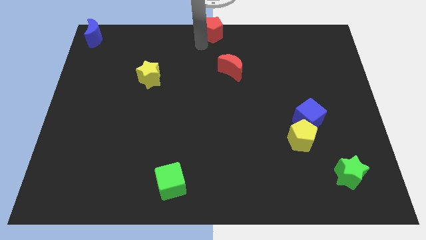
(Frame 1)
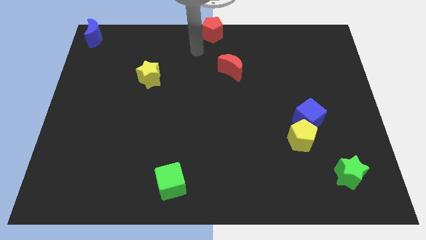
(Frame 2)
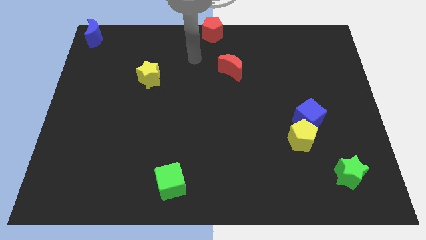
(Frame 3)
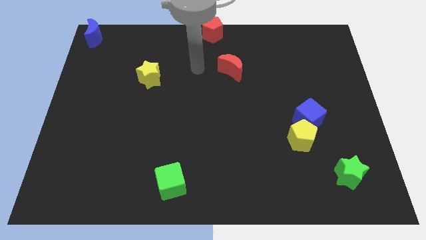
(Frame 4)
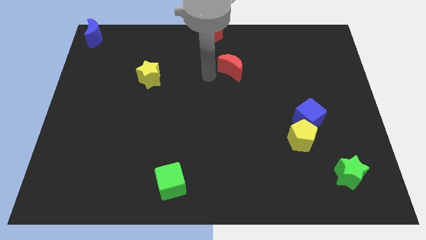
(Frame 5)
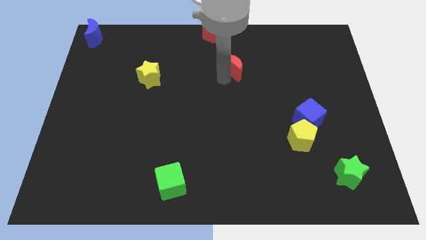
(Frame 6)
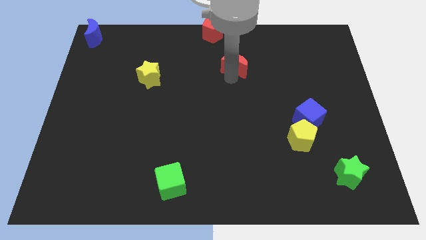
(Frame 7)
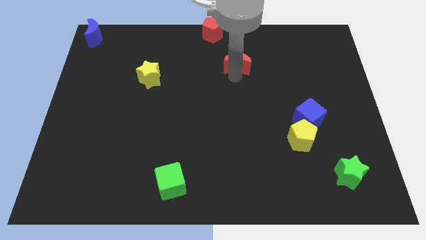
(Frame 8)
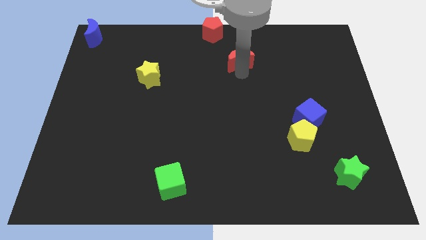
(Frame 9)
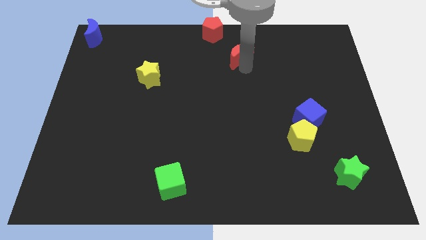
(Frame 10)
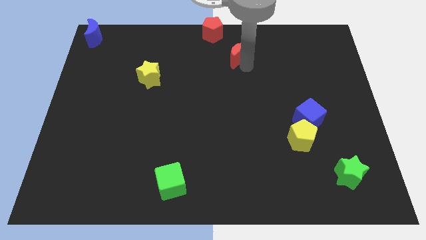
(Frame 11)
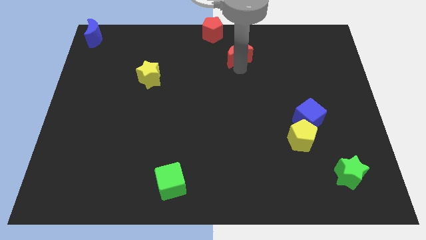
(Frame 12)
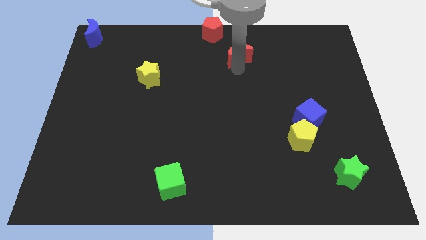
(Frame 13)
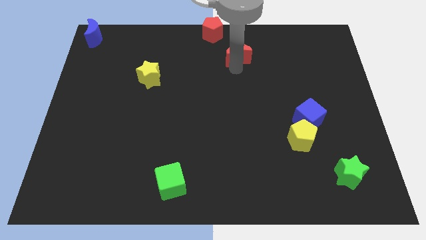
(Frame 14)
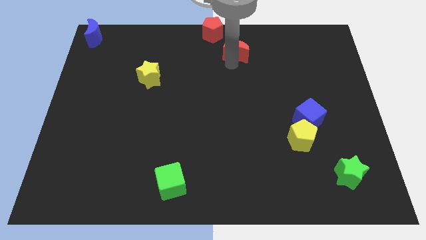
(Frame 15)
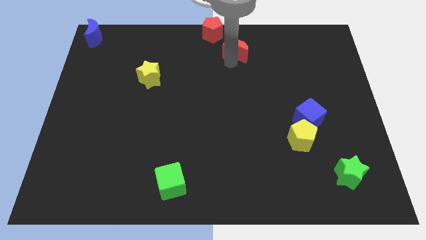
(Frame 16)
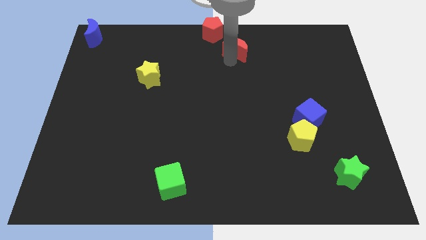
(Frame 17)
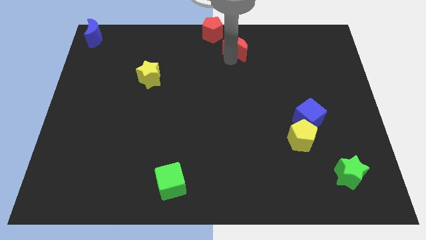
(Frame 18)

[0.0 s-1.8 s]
push the red crescent slightly to the top

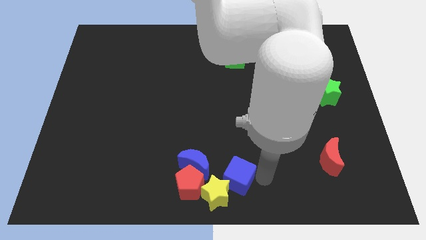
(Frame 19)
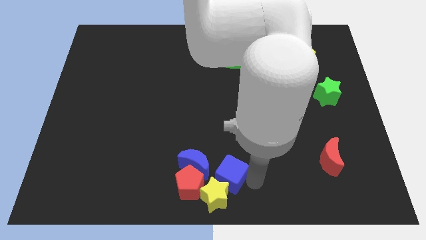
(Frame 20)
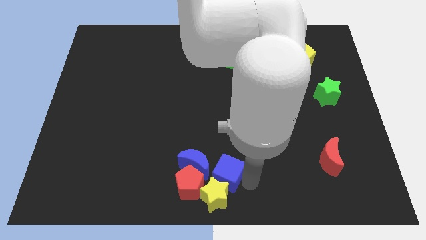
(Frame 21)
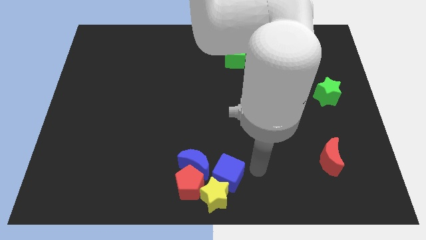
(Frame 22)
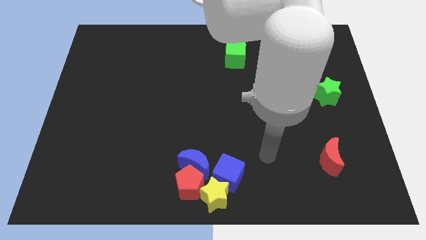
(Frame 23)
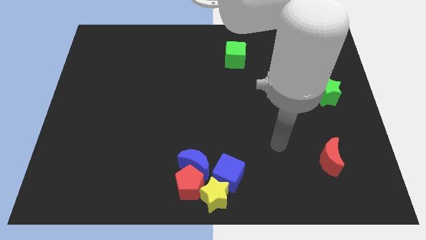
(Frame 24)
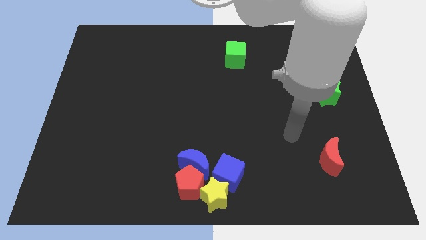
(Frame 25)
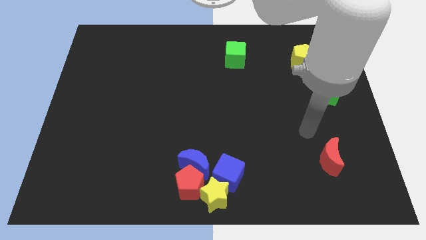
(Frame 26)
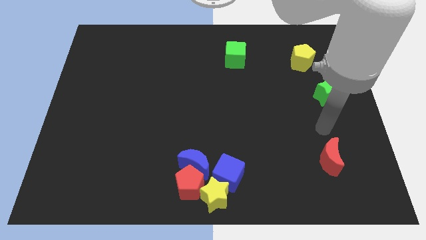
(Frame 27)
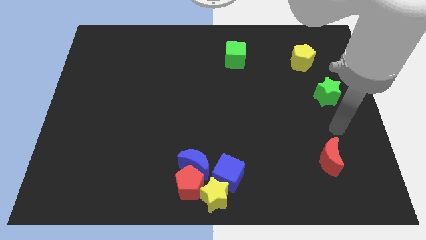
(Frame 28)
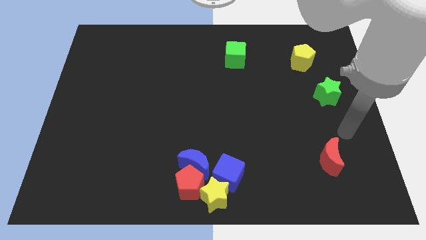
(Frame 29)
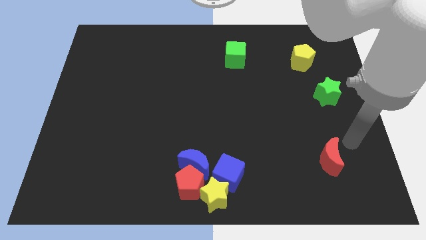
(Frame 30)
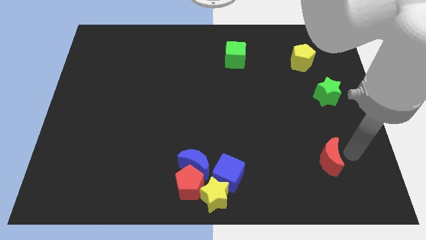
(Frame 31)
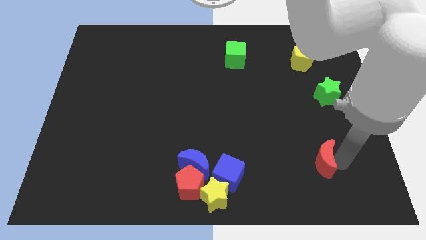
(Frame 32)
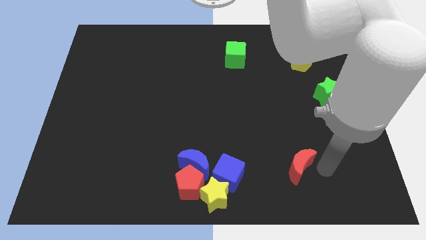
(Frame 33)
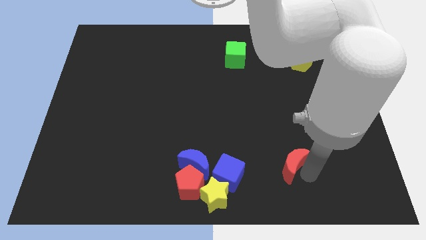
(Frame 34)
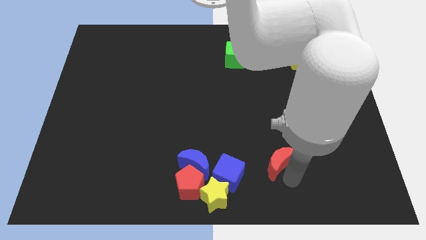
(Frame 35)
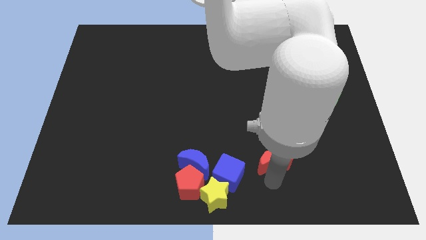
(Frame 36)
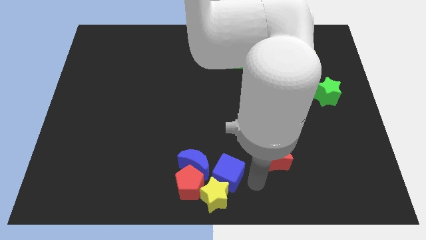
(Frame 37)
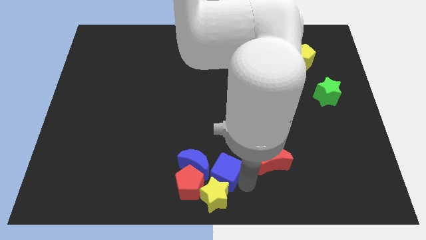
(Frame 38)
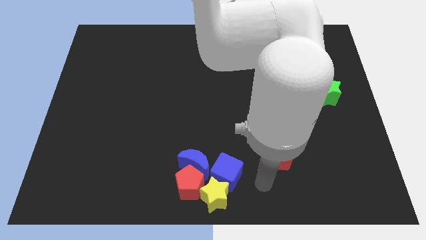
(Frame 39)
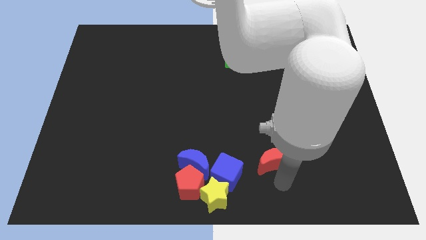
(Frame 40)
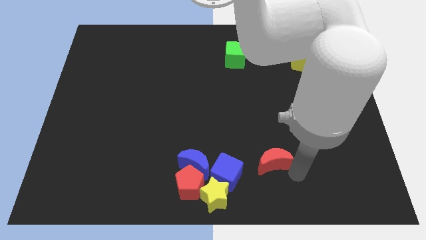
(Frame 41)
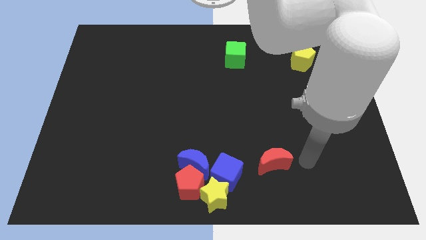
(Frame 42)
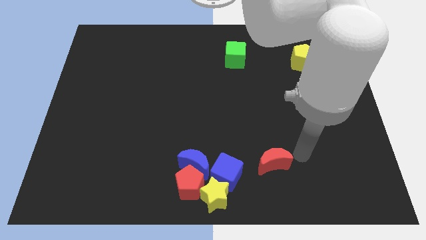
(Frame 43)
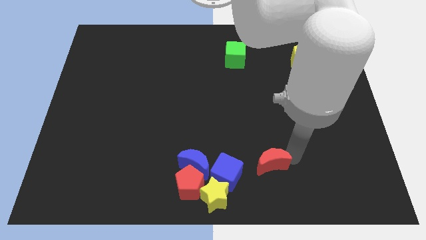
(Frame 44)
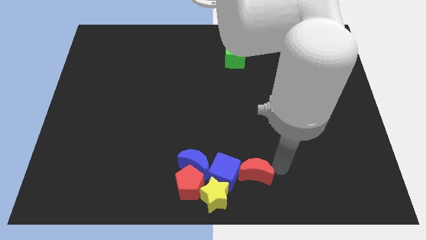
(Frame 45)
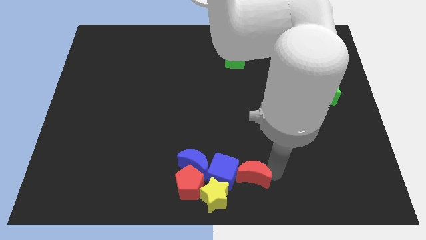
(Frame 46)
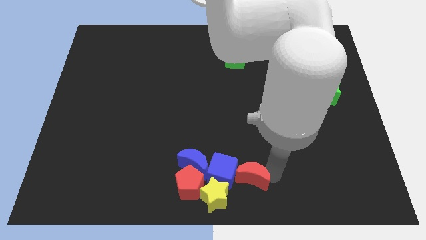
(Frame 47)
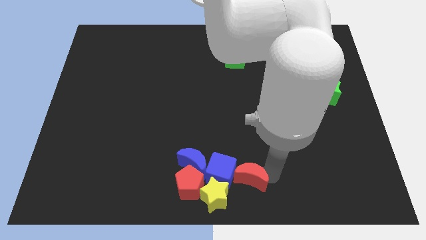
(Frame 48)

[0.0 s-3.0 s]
place the red crescent right to the blue cube

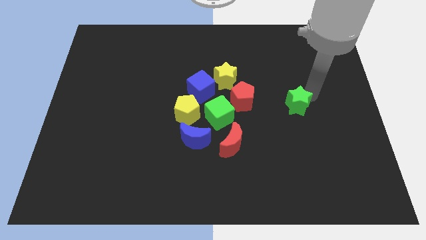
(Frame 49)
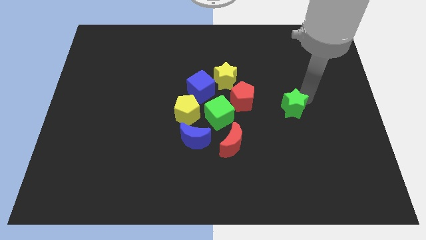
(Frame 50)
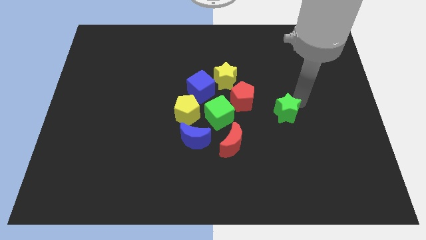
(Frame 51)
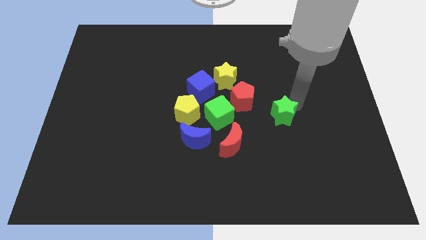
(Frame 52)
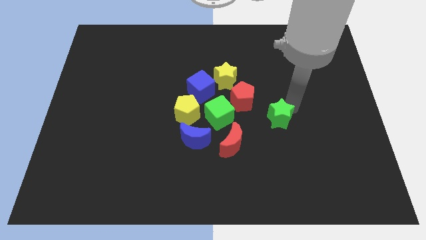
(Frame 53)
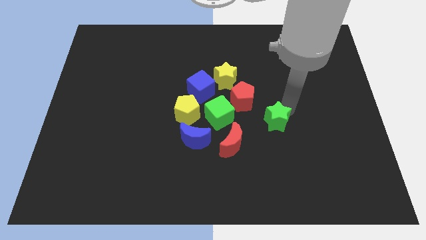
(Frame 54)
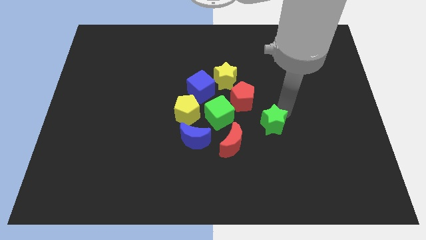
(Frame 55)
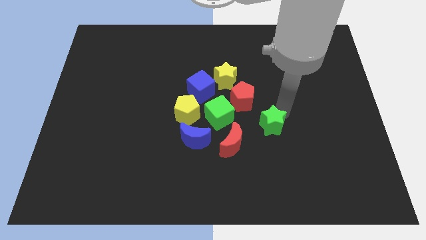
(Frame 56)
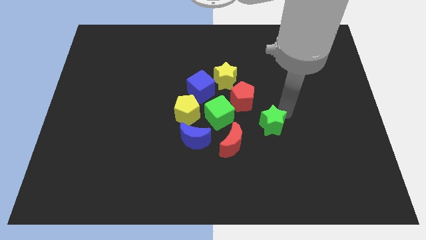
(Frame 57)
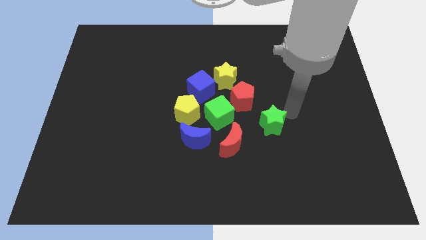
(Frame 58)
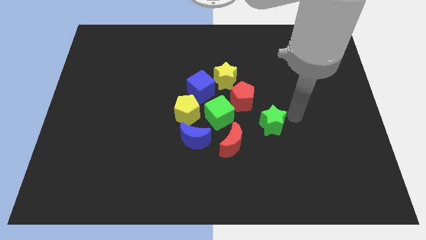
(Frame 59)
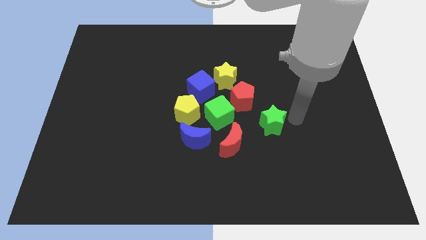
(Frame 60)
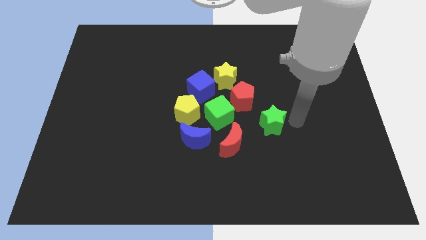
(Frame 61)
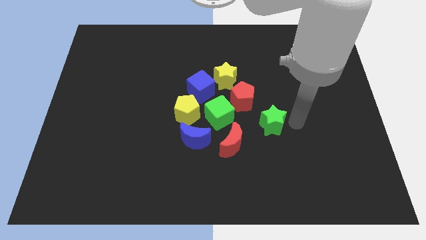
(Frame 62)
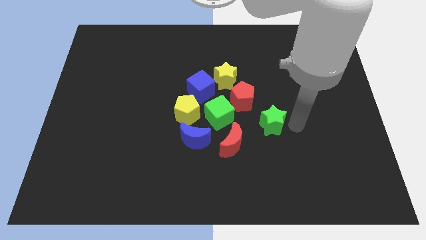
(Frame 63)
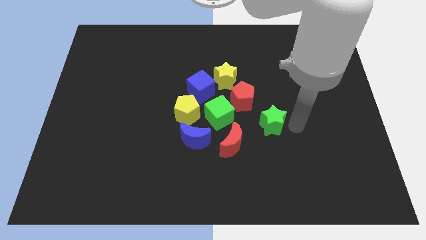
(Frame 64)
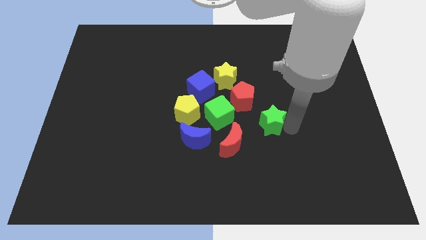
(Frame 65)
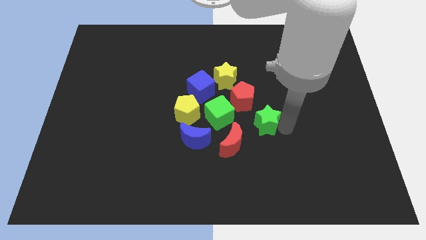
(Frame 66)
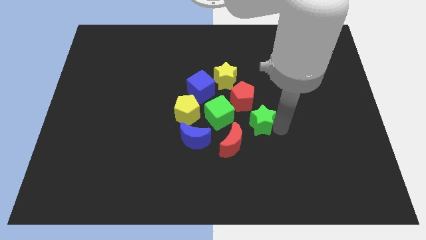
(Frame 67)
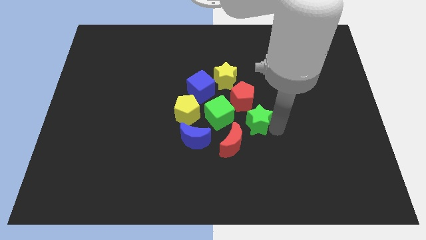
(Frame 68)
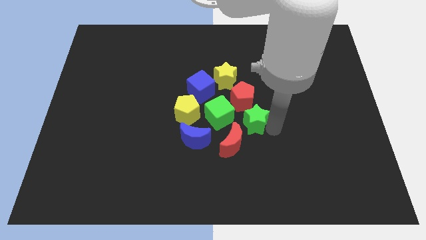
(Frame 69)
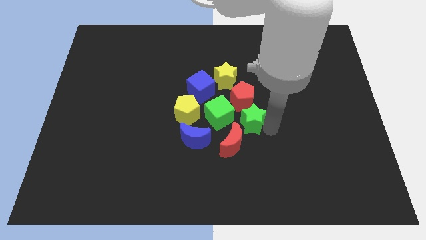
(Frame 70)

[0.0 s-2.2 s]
place the green star right to the green cube

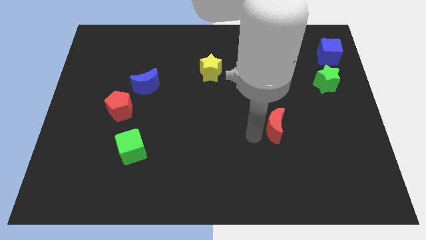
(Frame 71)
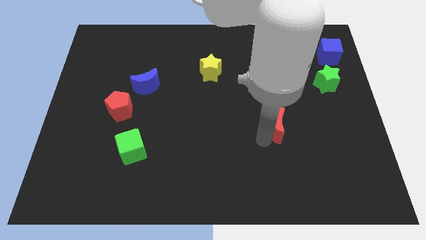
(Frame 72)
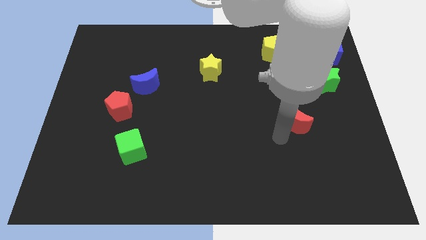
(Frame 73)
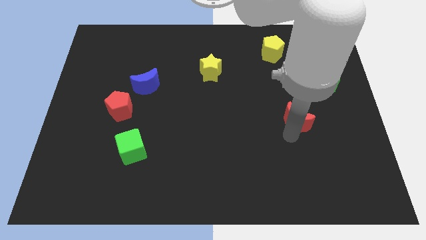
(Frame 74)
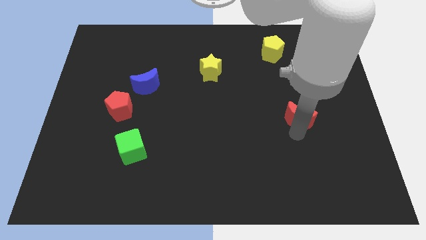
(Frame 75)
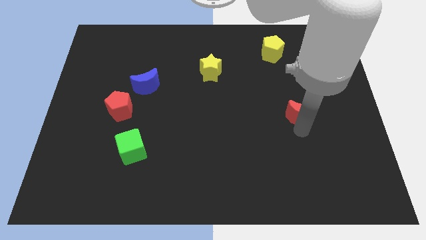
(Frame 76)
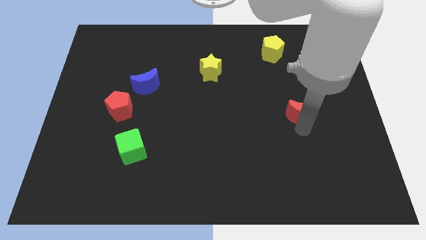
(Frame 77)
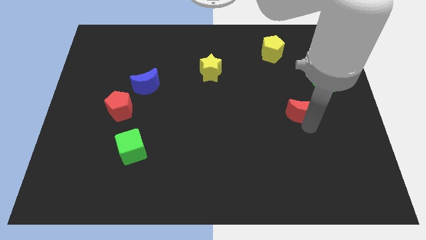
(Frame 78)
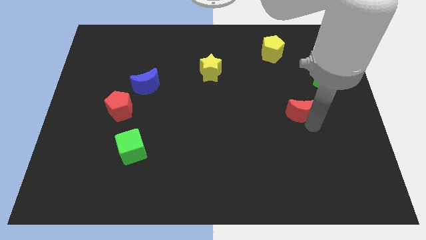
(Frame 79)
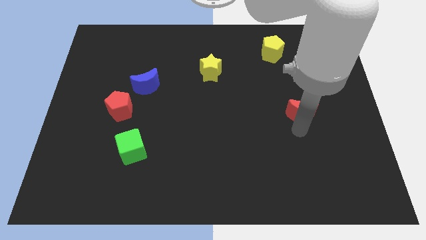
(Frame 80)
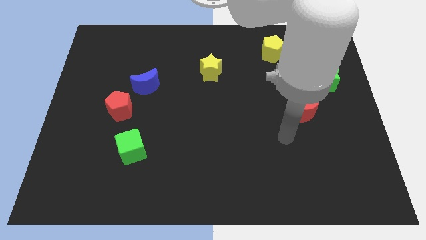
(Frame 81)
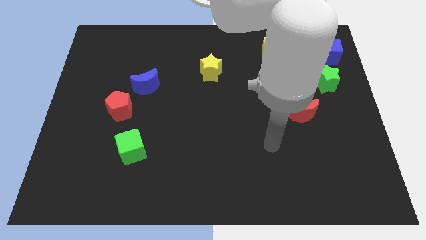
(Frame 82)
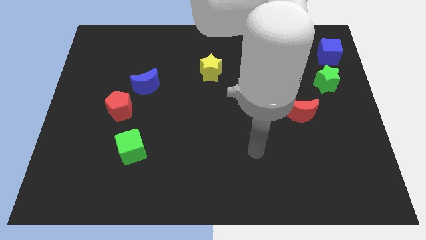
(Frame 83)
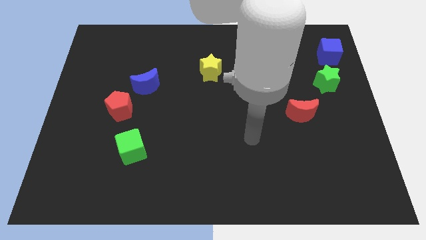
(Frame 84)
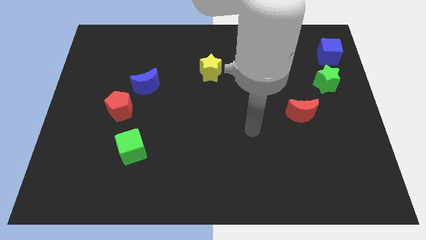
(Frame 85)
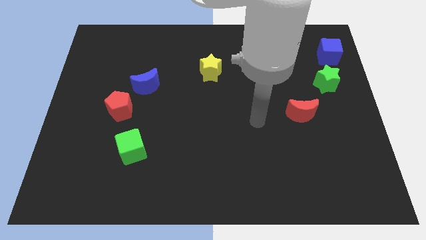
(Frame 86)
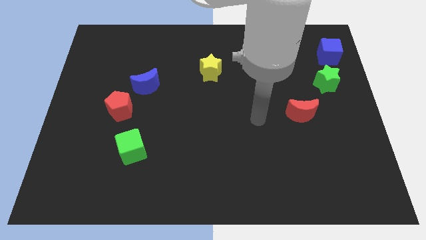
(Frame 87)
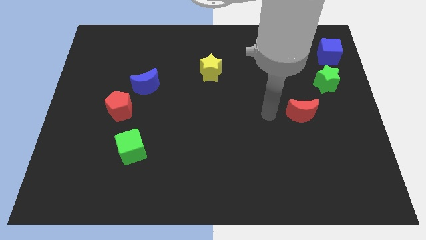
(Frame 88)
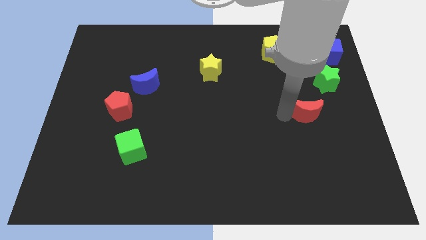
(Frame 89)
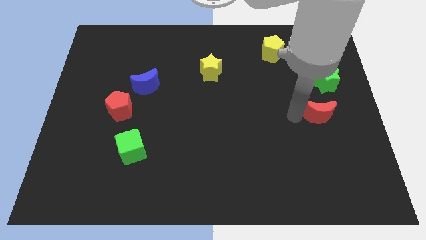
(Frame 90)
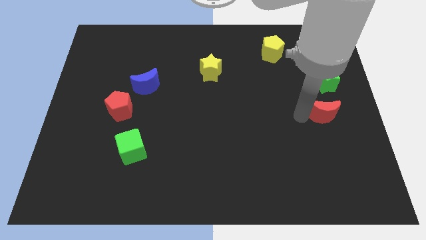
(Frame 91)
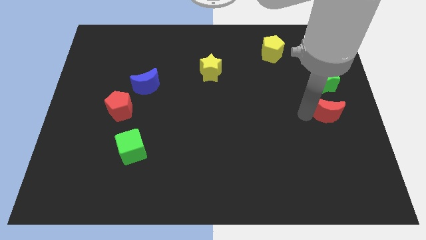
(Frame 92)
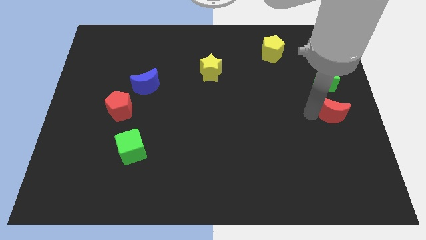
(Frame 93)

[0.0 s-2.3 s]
place the red moon below the green star
